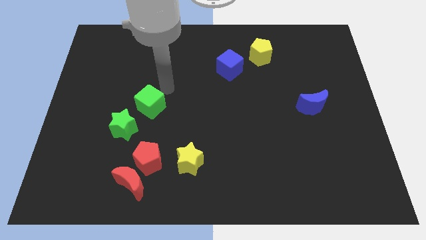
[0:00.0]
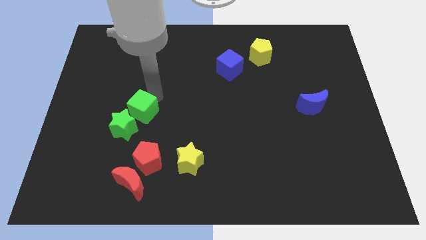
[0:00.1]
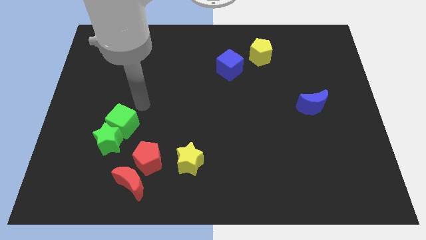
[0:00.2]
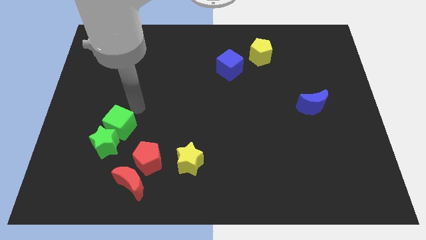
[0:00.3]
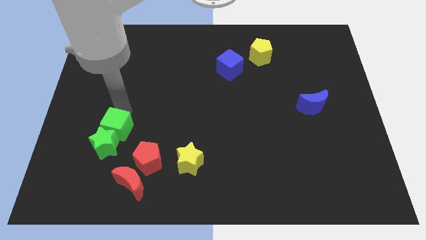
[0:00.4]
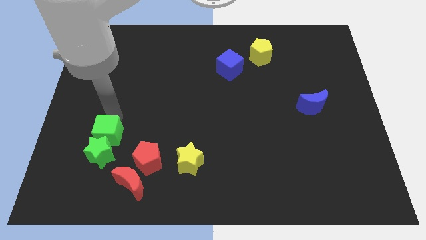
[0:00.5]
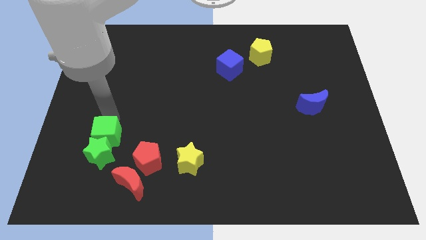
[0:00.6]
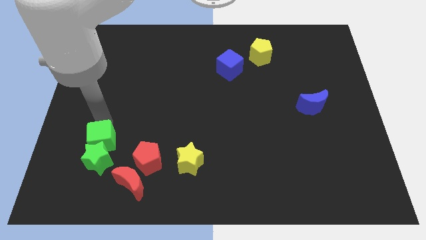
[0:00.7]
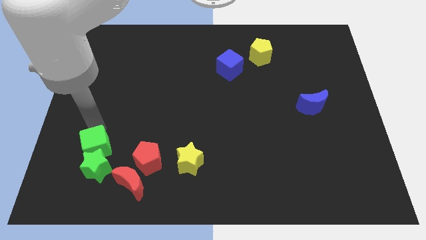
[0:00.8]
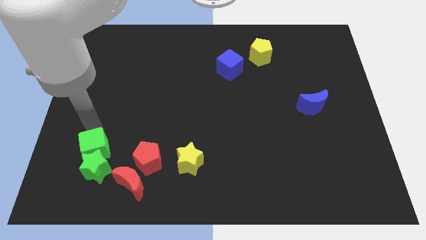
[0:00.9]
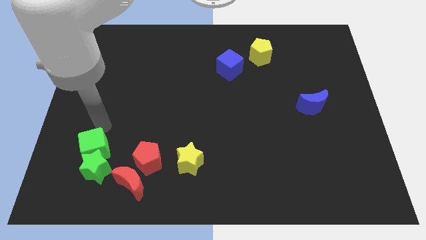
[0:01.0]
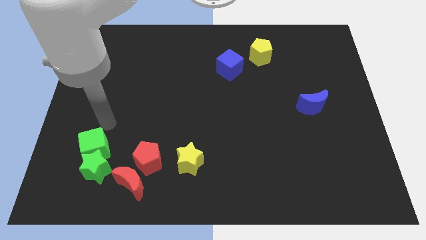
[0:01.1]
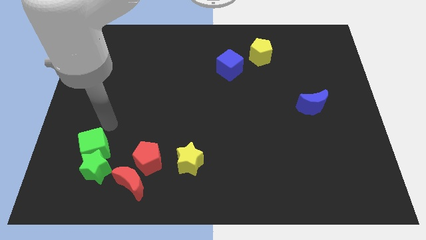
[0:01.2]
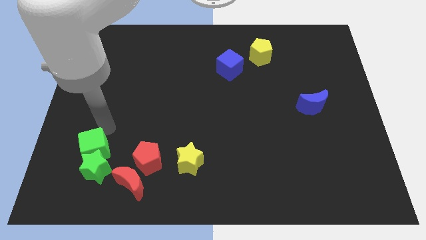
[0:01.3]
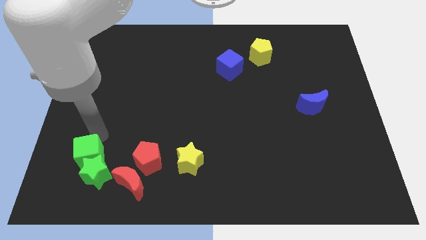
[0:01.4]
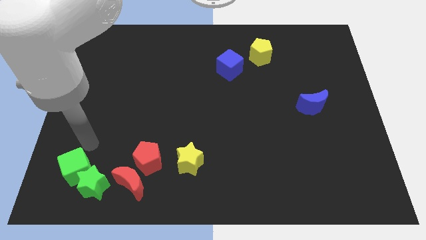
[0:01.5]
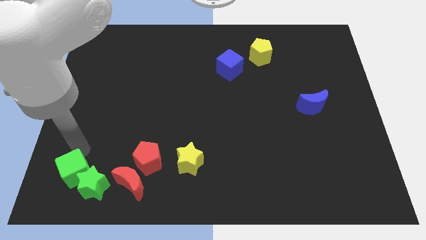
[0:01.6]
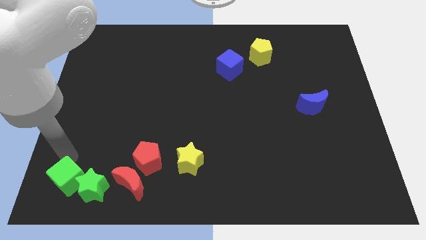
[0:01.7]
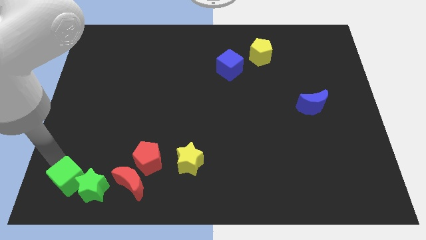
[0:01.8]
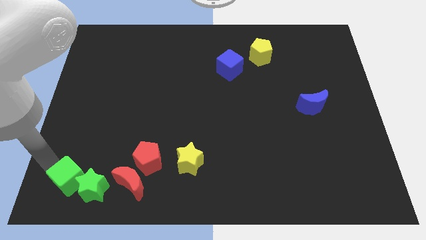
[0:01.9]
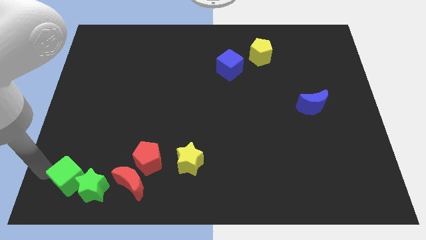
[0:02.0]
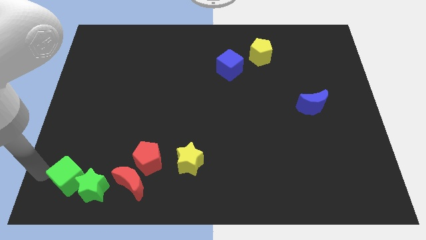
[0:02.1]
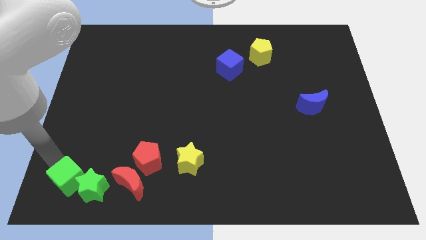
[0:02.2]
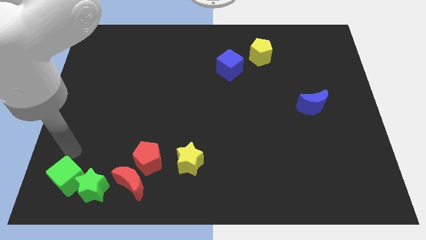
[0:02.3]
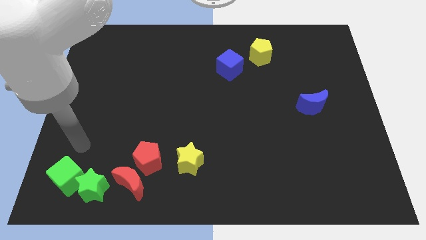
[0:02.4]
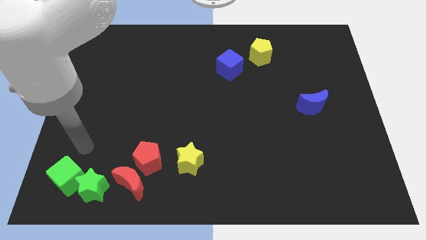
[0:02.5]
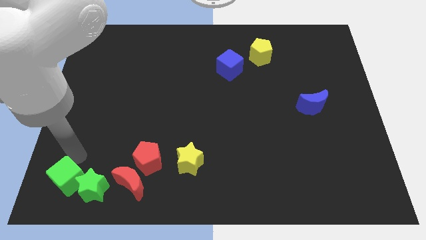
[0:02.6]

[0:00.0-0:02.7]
move the green cube along with green star towards the left of red crescent

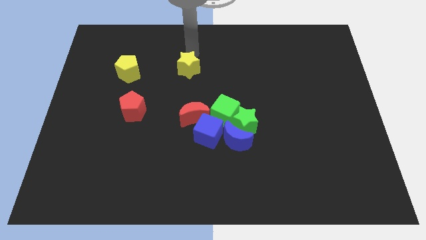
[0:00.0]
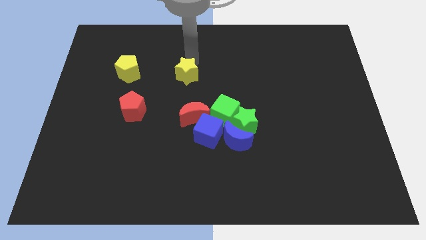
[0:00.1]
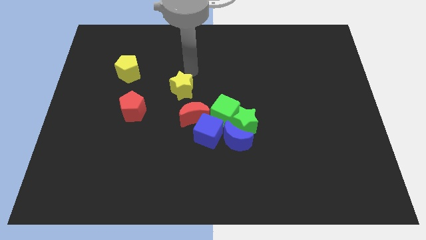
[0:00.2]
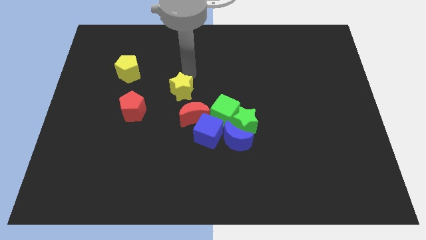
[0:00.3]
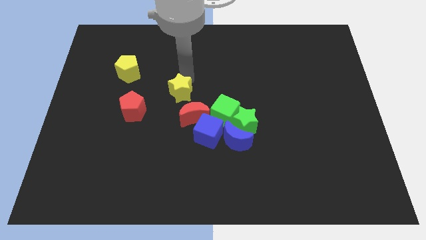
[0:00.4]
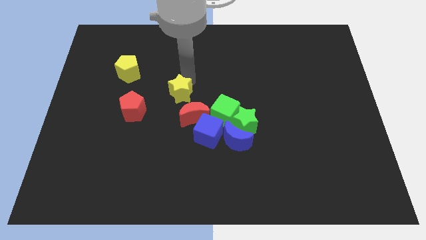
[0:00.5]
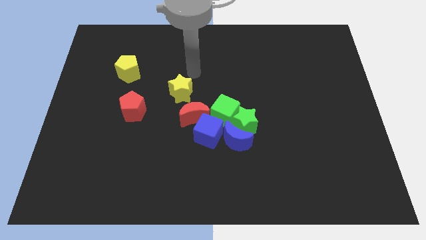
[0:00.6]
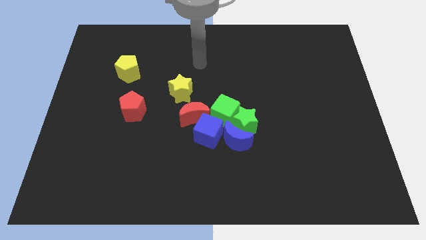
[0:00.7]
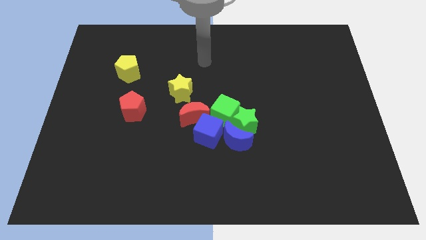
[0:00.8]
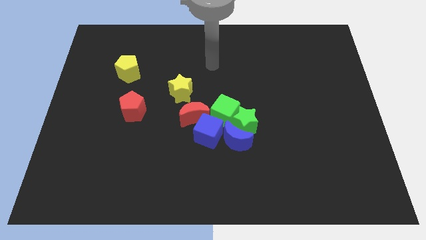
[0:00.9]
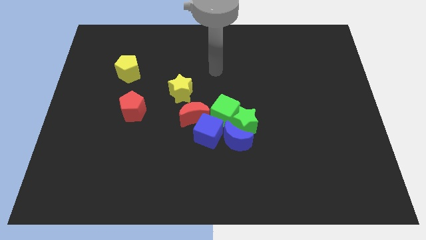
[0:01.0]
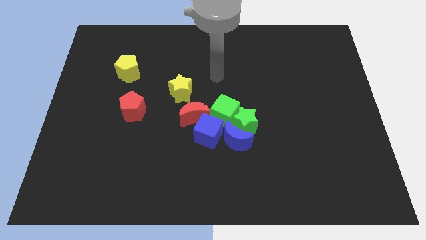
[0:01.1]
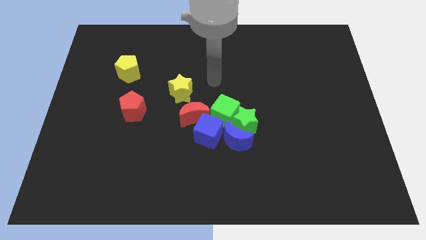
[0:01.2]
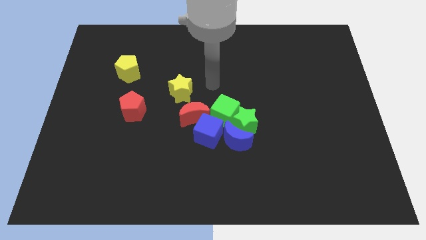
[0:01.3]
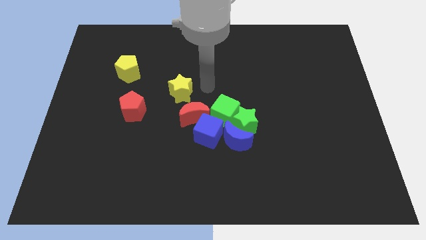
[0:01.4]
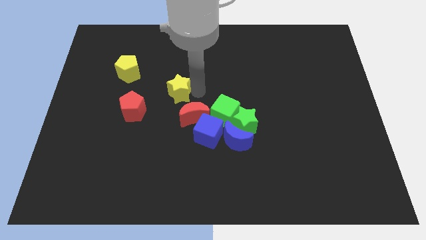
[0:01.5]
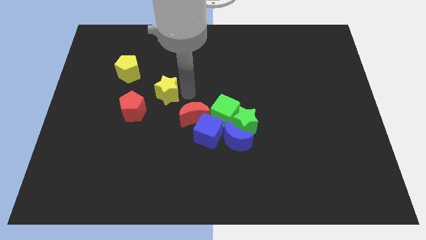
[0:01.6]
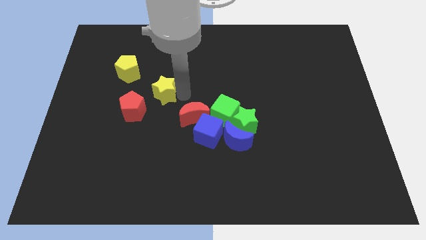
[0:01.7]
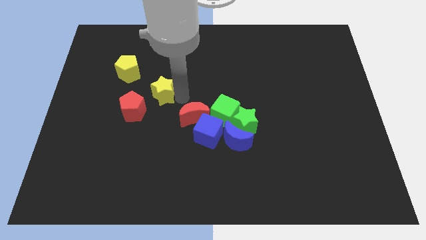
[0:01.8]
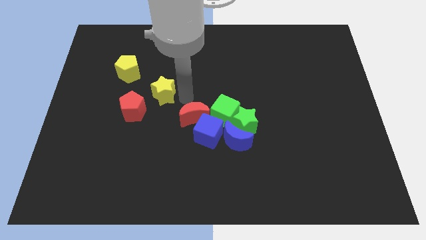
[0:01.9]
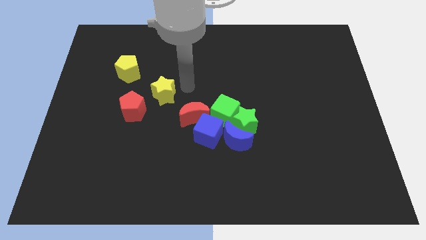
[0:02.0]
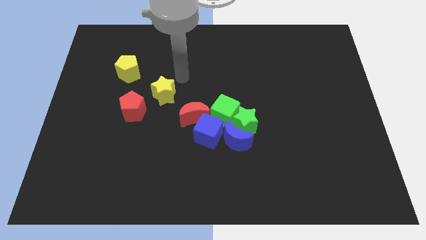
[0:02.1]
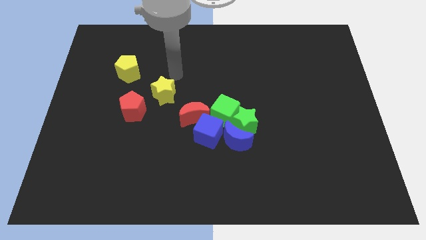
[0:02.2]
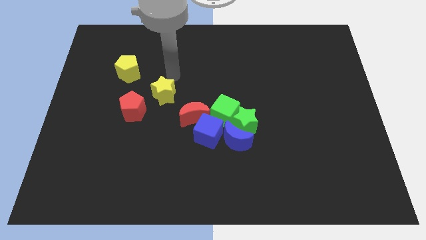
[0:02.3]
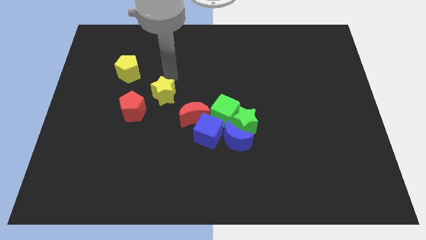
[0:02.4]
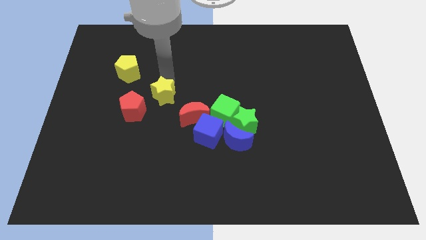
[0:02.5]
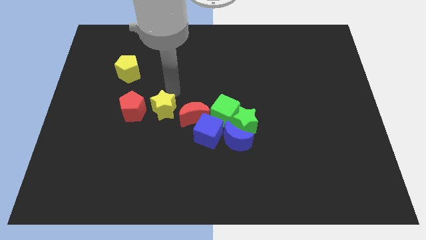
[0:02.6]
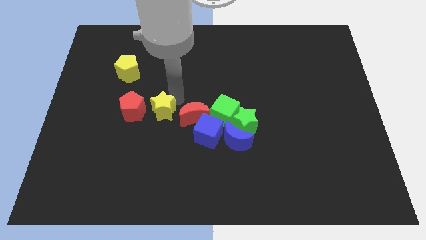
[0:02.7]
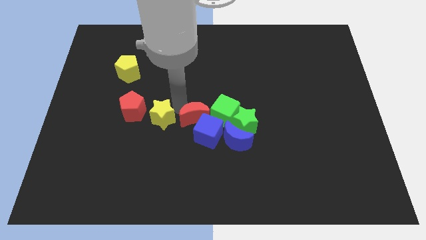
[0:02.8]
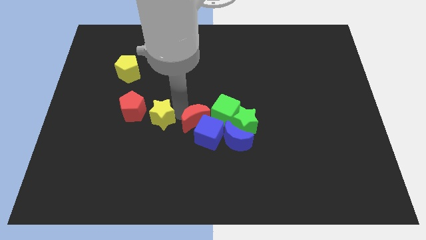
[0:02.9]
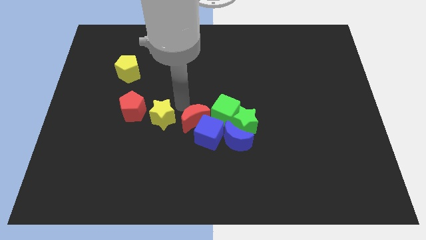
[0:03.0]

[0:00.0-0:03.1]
put the yellow star between red pentagon and red moon

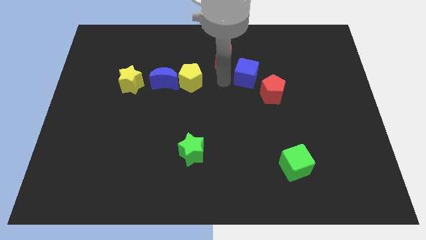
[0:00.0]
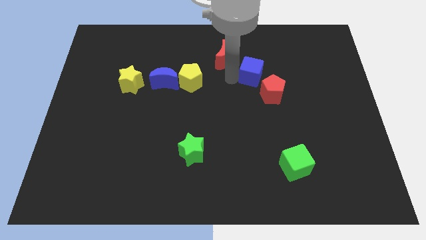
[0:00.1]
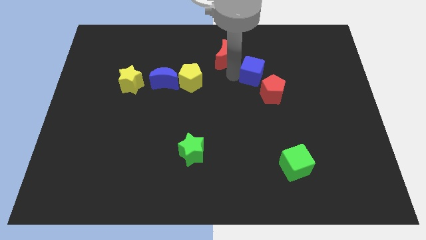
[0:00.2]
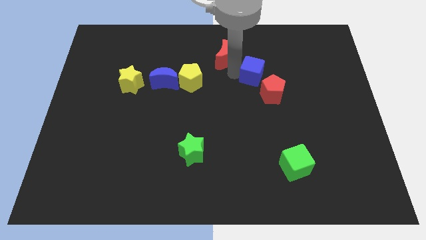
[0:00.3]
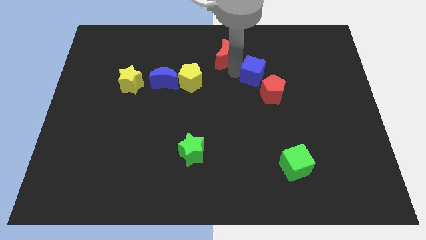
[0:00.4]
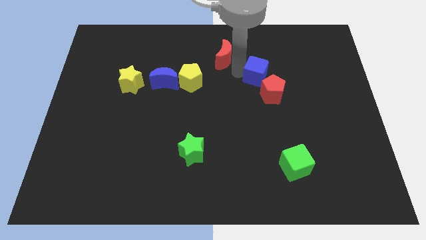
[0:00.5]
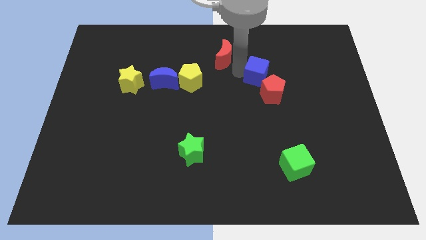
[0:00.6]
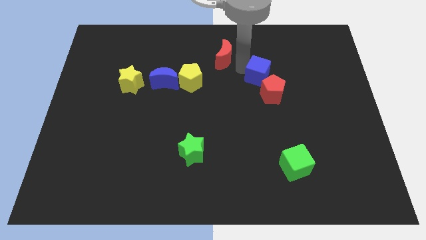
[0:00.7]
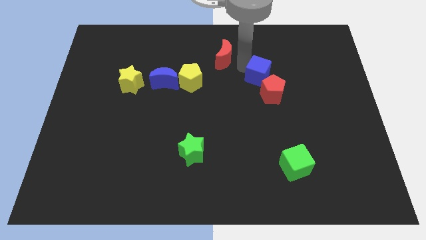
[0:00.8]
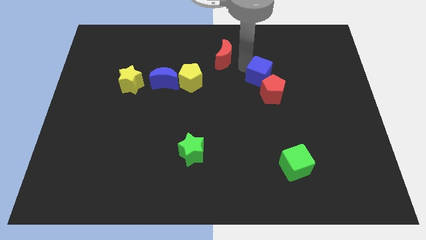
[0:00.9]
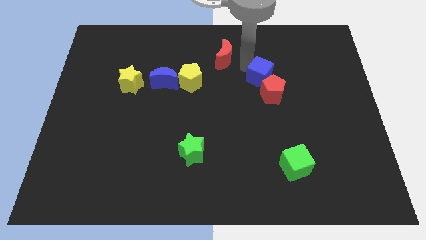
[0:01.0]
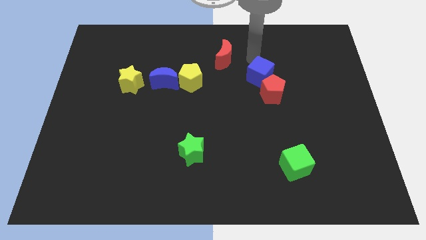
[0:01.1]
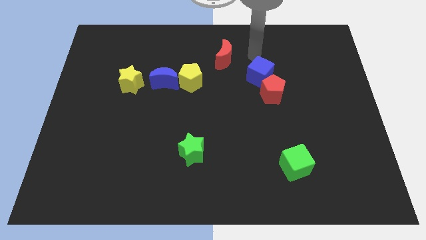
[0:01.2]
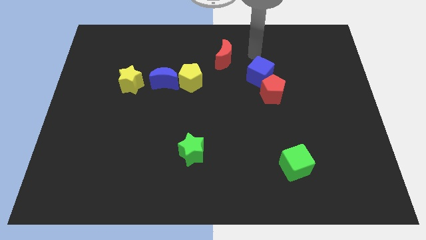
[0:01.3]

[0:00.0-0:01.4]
slightly push the blue cube to the top of the red pentagon

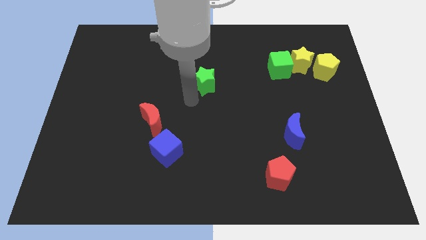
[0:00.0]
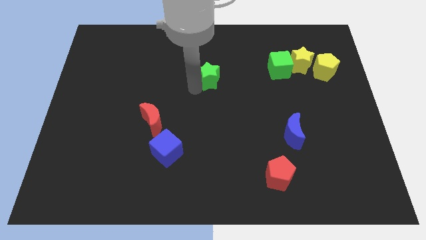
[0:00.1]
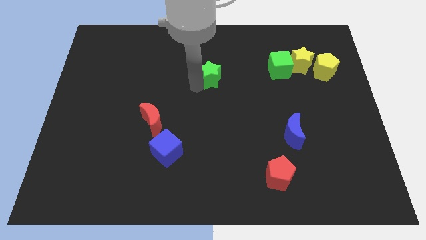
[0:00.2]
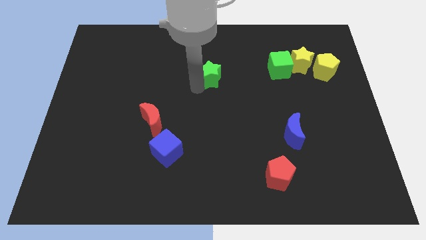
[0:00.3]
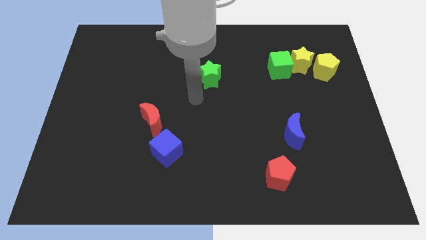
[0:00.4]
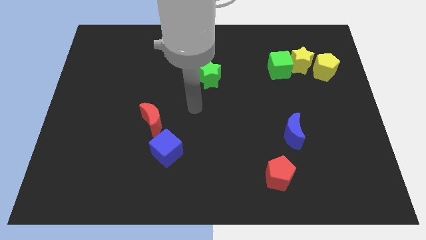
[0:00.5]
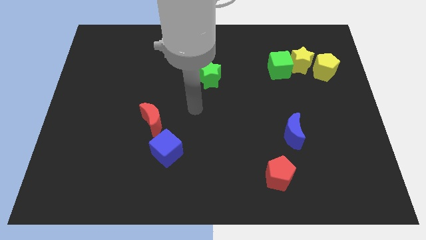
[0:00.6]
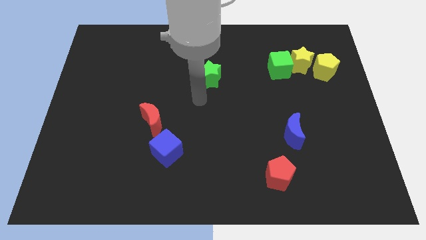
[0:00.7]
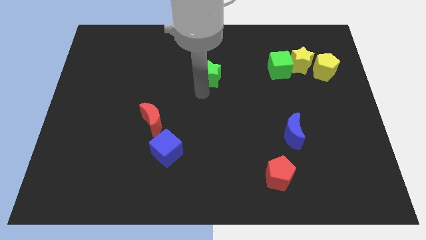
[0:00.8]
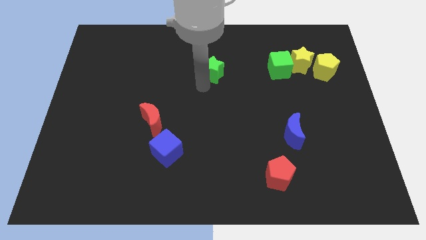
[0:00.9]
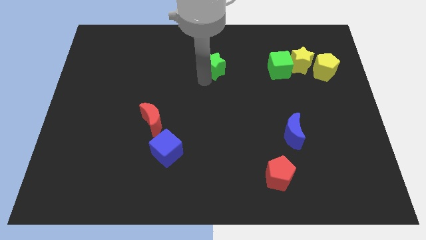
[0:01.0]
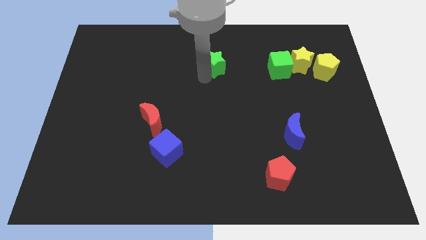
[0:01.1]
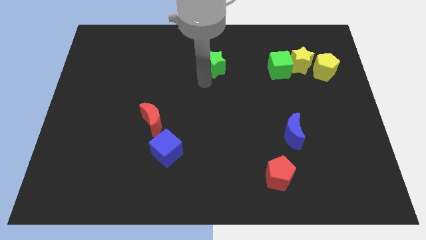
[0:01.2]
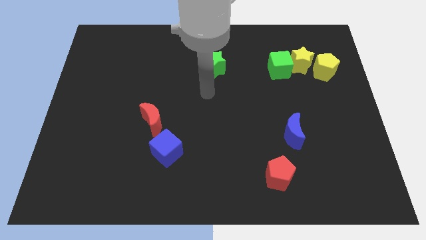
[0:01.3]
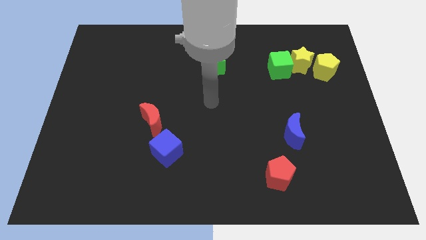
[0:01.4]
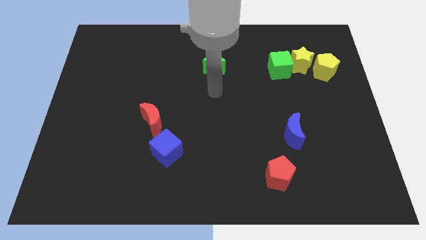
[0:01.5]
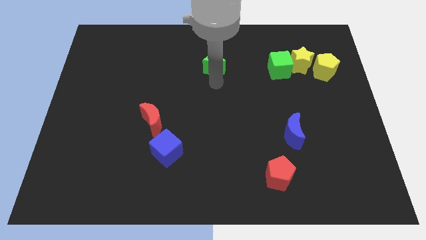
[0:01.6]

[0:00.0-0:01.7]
slide the green star to the left of the green cube

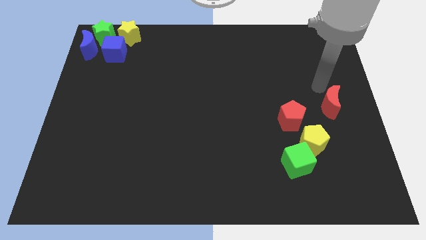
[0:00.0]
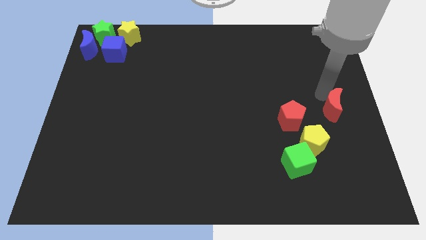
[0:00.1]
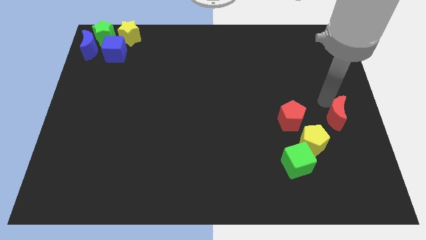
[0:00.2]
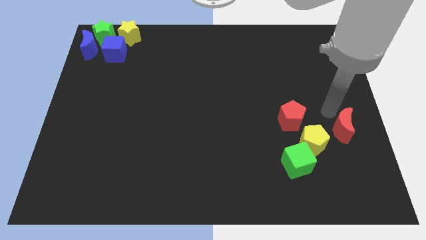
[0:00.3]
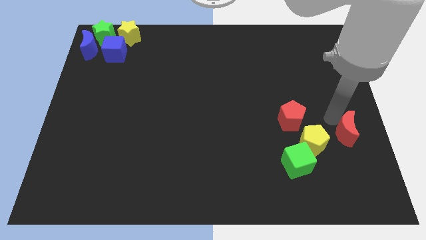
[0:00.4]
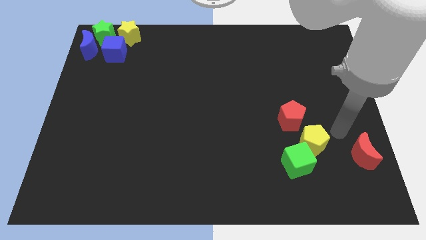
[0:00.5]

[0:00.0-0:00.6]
place red moon to the right of yellow pentagon
